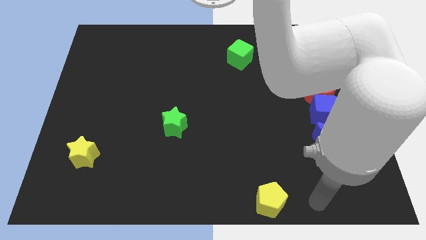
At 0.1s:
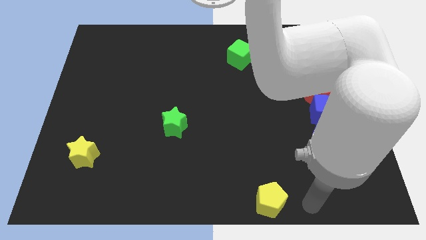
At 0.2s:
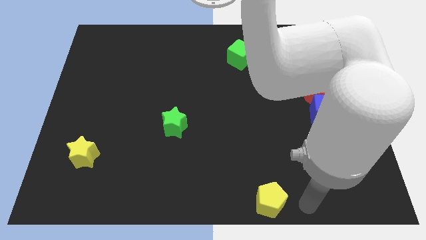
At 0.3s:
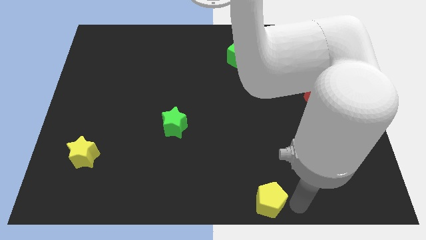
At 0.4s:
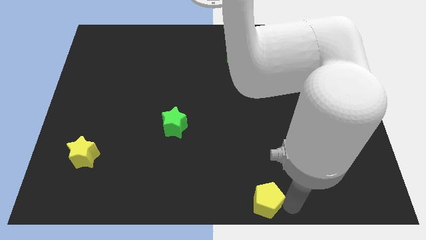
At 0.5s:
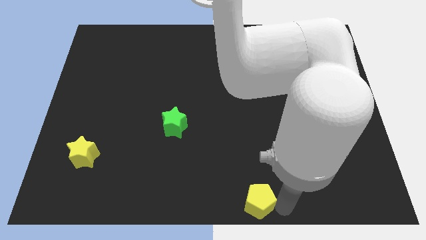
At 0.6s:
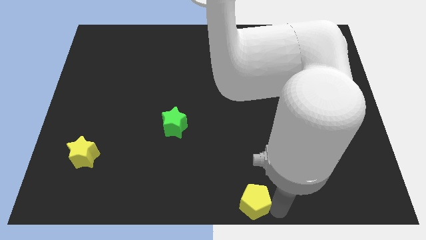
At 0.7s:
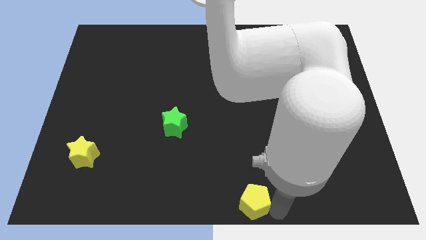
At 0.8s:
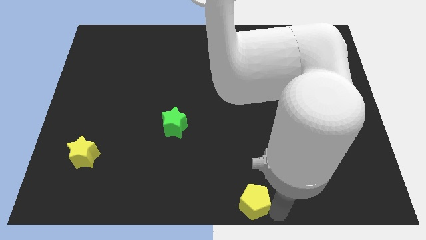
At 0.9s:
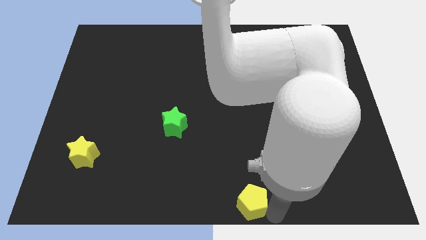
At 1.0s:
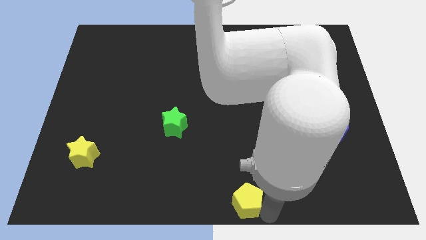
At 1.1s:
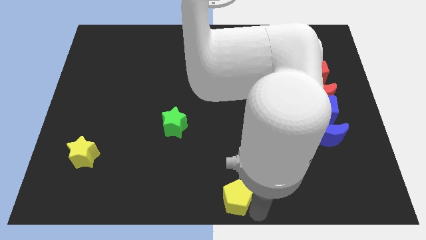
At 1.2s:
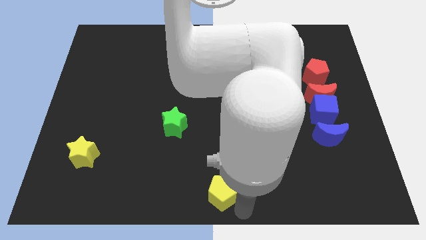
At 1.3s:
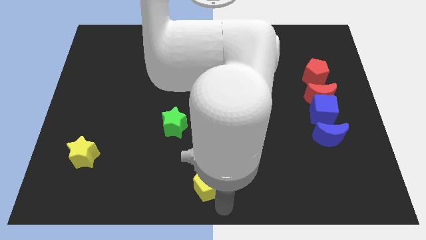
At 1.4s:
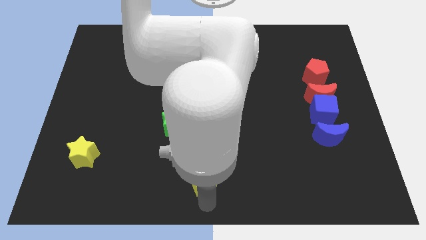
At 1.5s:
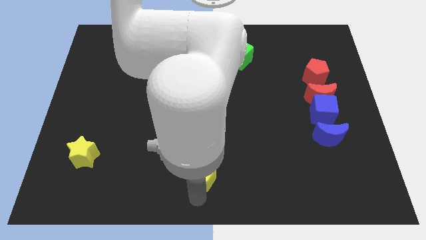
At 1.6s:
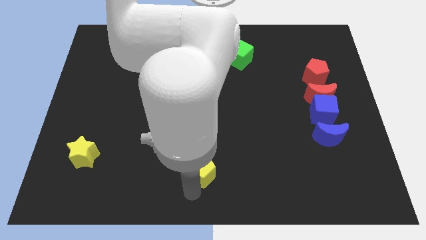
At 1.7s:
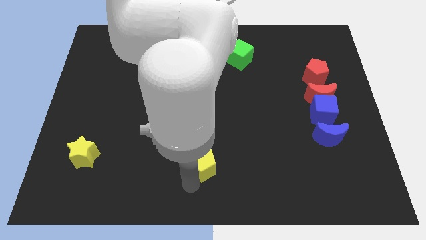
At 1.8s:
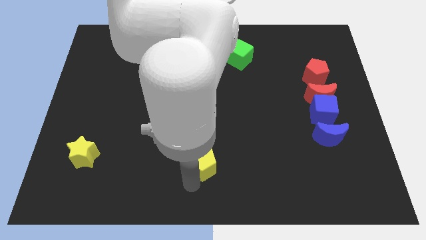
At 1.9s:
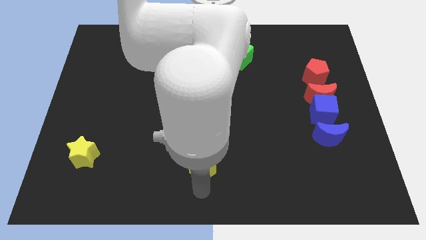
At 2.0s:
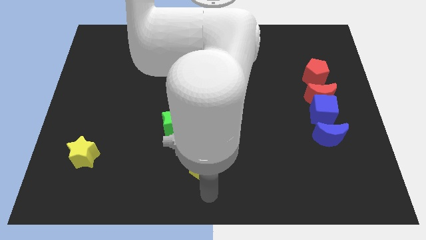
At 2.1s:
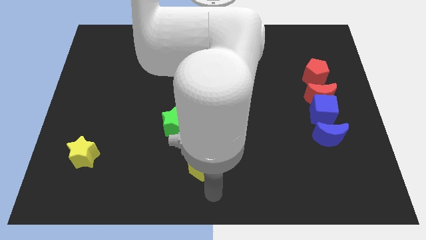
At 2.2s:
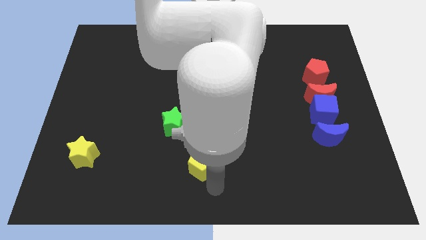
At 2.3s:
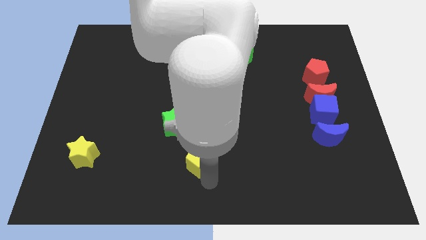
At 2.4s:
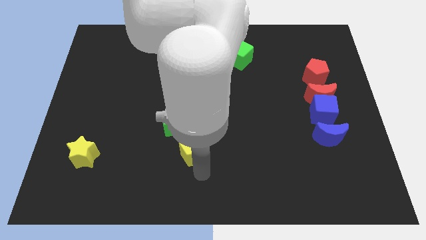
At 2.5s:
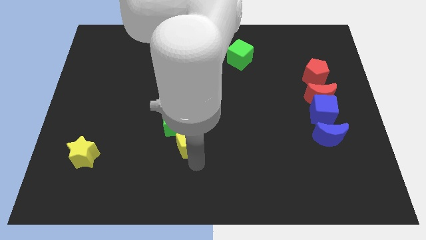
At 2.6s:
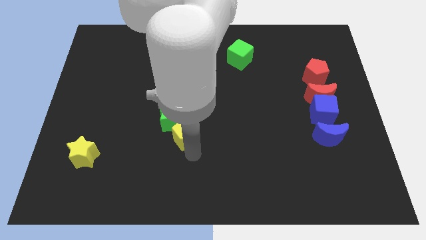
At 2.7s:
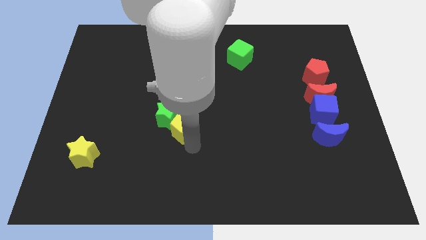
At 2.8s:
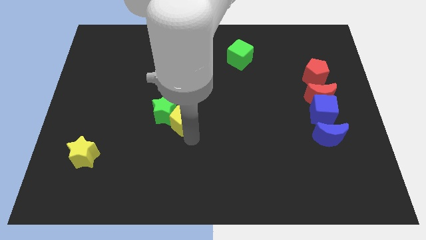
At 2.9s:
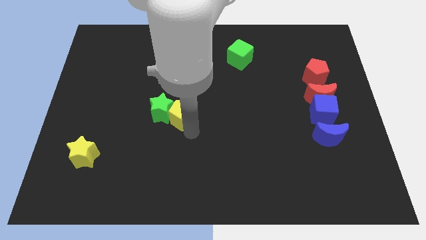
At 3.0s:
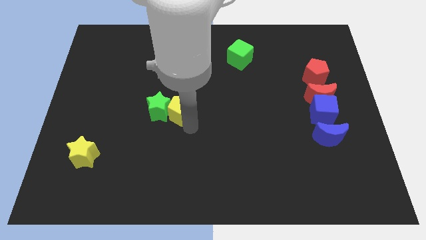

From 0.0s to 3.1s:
put the yellow pentagon on the right side of the green star

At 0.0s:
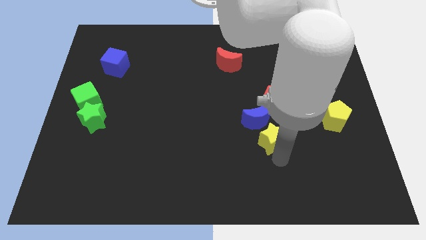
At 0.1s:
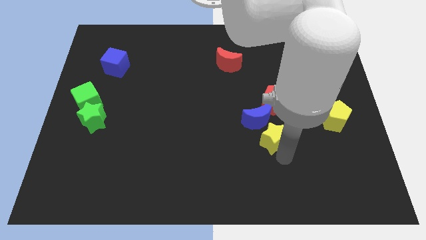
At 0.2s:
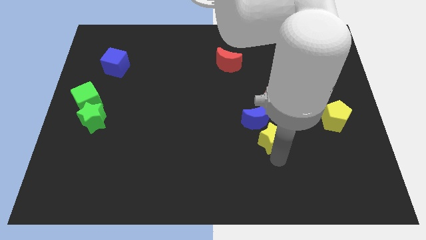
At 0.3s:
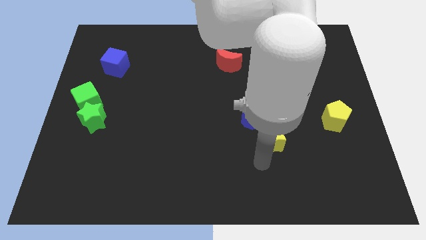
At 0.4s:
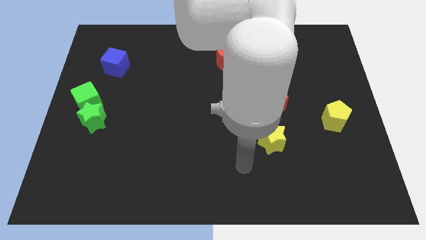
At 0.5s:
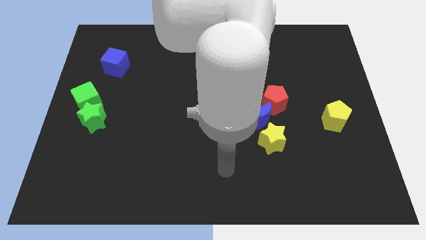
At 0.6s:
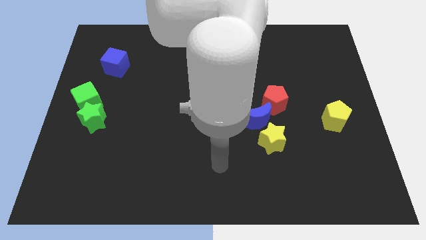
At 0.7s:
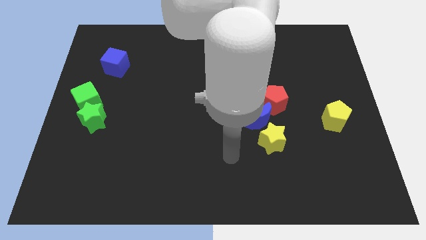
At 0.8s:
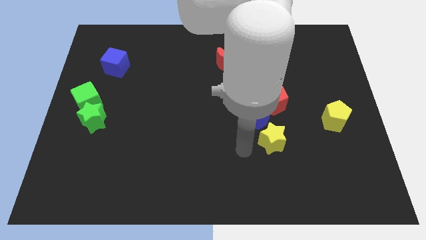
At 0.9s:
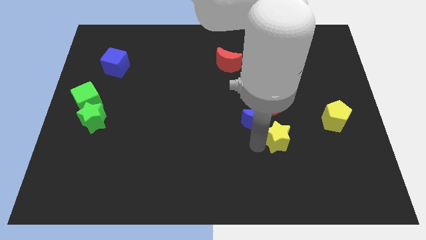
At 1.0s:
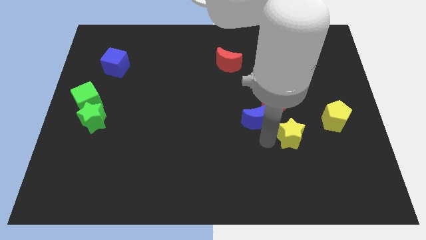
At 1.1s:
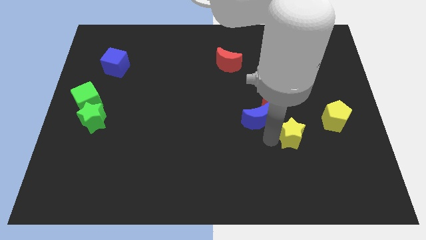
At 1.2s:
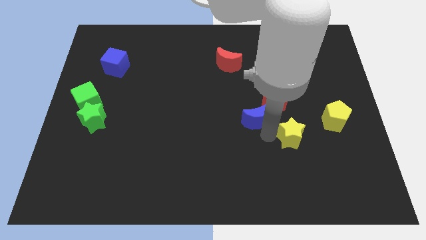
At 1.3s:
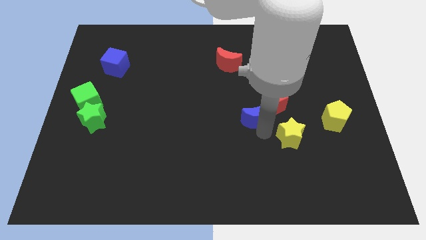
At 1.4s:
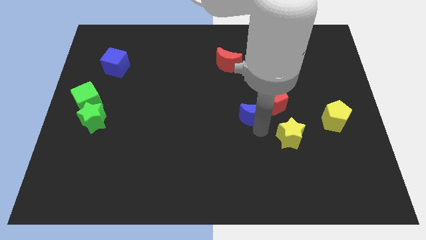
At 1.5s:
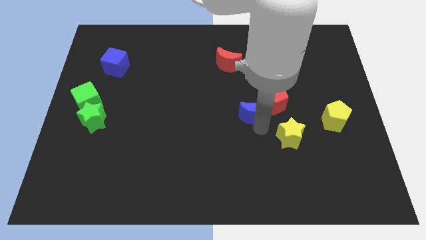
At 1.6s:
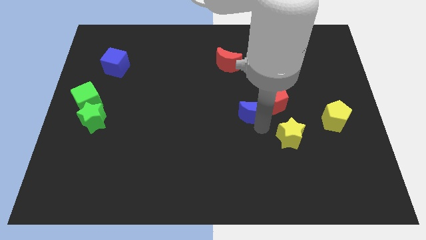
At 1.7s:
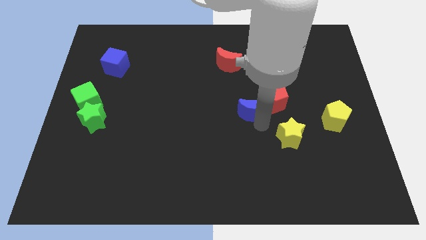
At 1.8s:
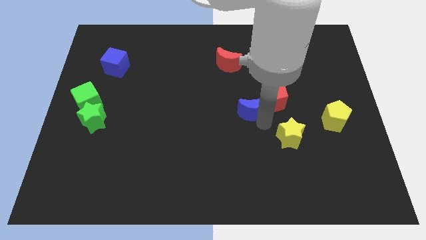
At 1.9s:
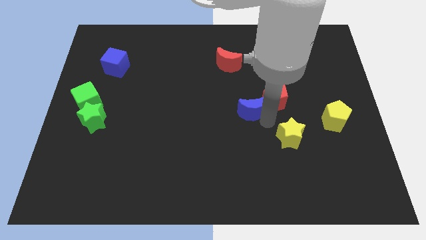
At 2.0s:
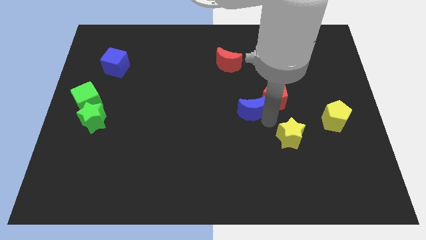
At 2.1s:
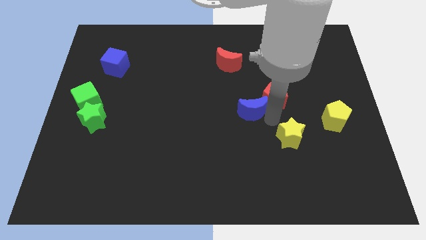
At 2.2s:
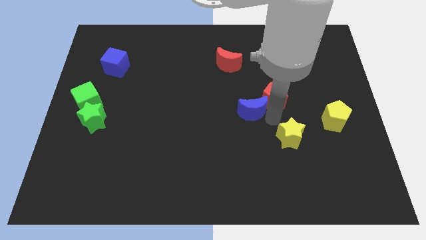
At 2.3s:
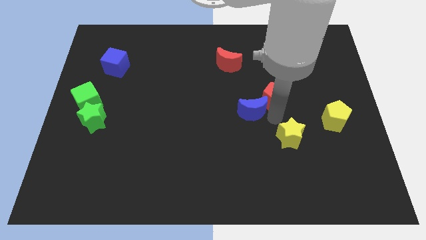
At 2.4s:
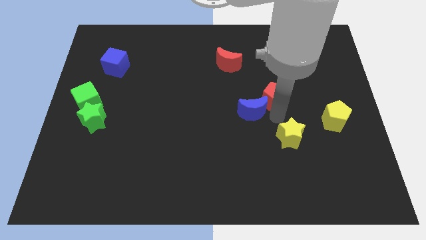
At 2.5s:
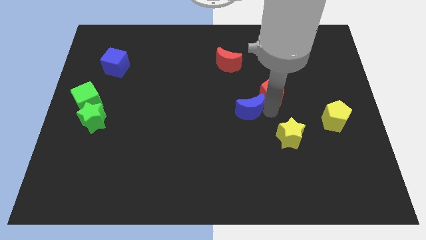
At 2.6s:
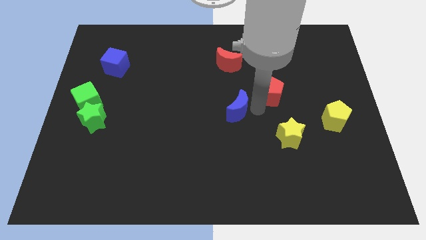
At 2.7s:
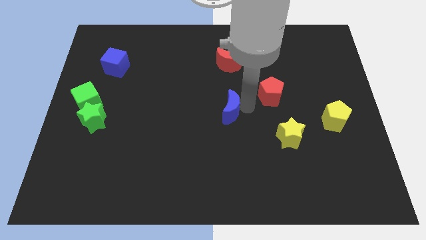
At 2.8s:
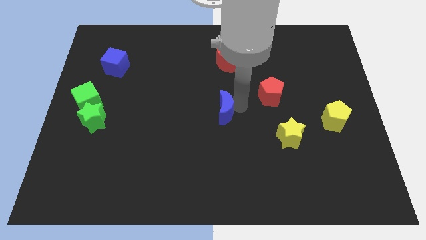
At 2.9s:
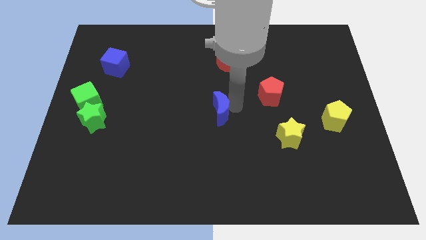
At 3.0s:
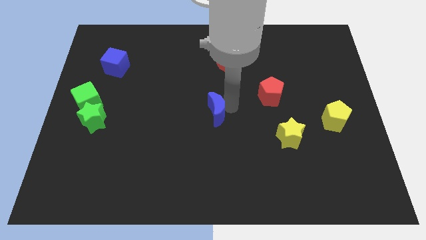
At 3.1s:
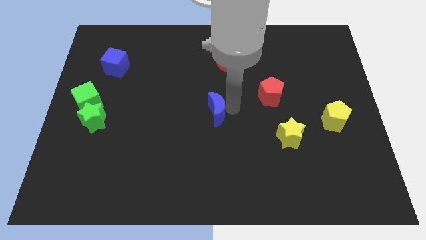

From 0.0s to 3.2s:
separate the yellow star blue crescent and the red pentagon

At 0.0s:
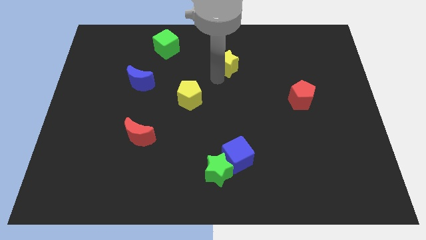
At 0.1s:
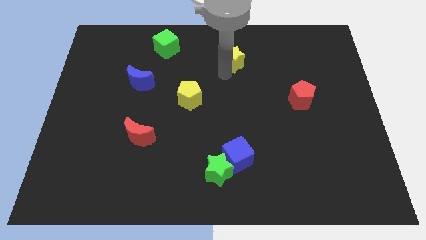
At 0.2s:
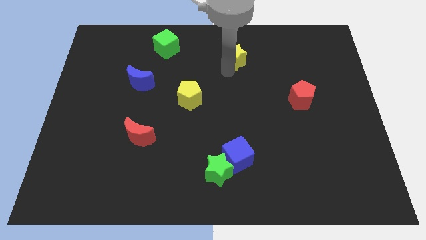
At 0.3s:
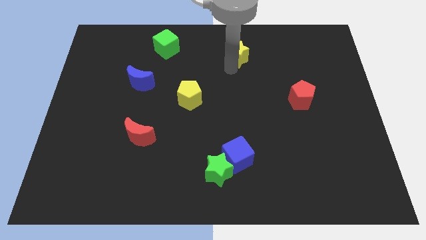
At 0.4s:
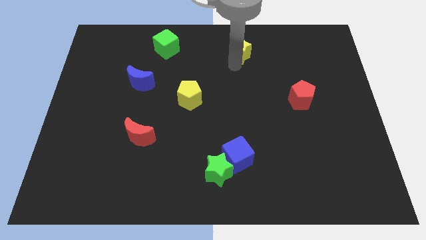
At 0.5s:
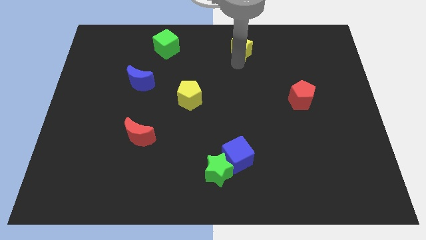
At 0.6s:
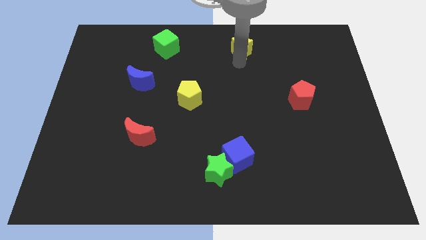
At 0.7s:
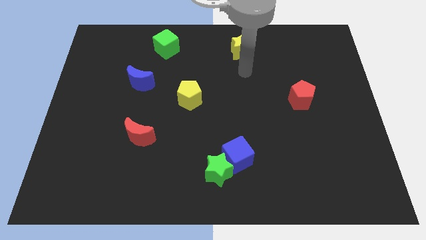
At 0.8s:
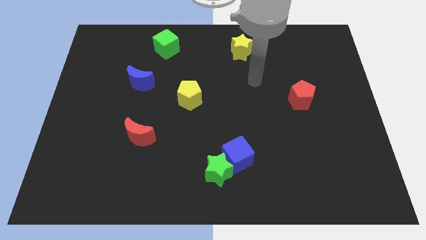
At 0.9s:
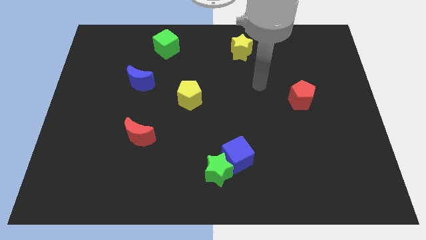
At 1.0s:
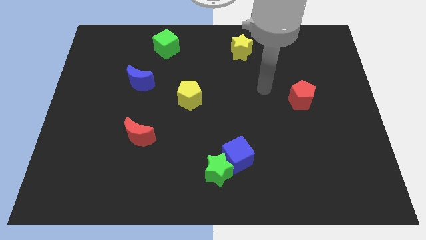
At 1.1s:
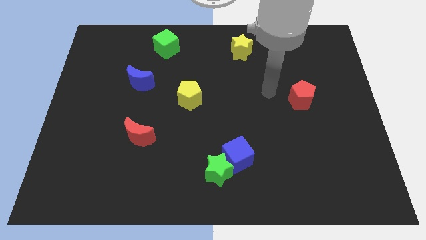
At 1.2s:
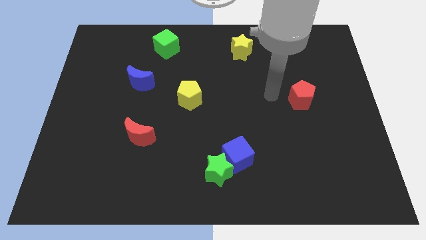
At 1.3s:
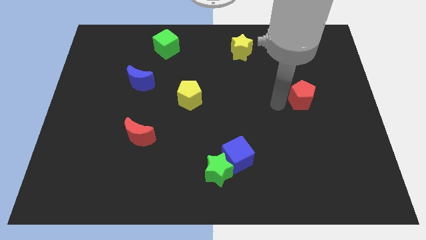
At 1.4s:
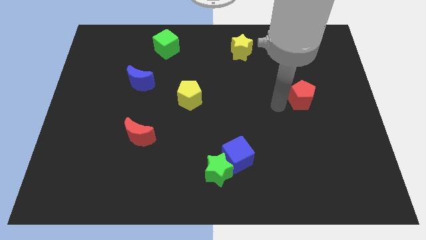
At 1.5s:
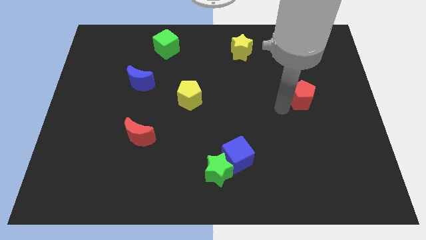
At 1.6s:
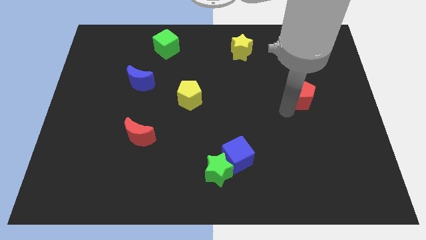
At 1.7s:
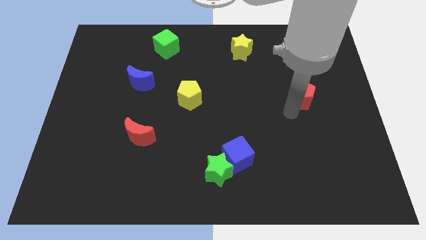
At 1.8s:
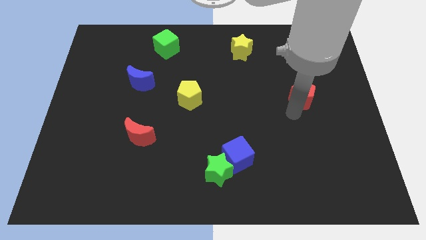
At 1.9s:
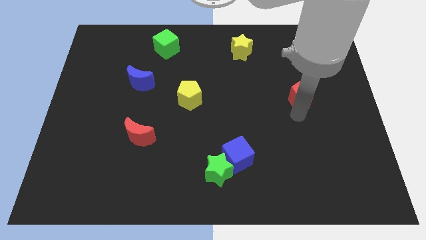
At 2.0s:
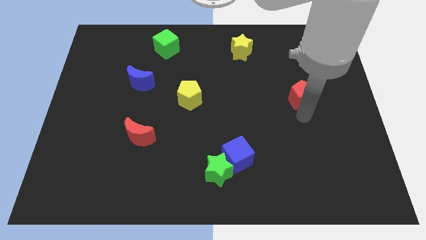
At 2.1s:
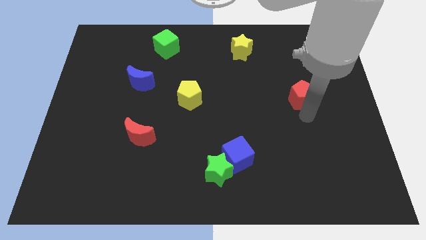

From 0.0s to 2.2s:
place the arm down to the red pentagon

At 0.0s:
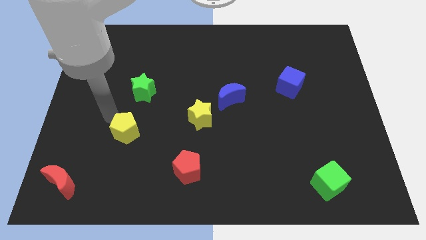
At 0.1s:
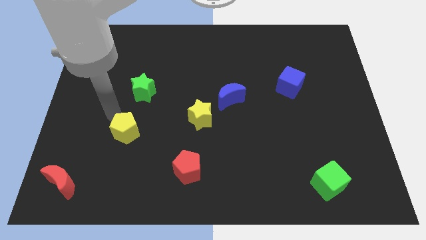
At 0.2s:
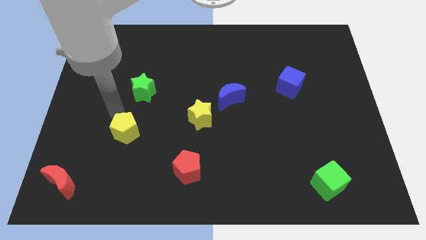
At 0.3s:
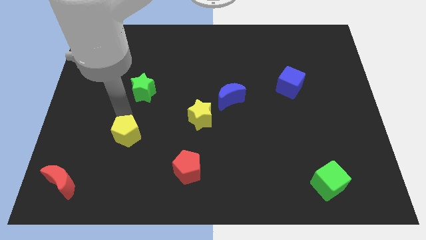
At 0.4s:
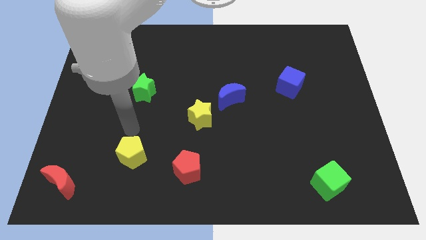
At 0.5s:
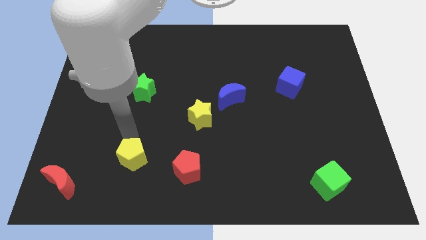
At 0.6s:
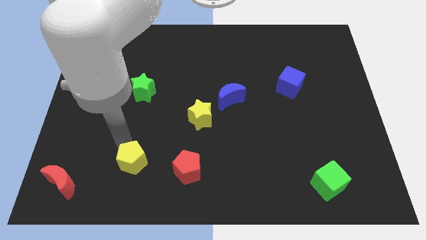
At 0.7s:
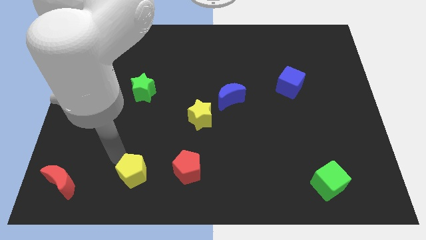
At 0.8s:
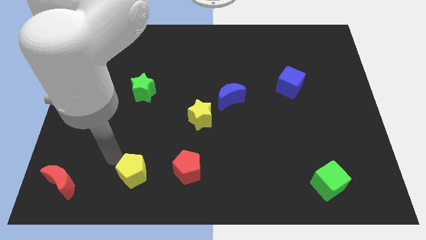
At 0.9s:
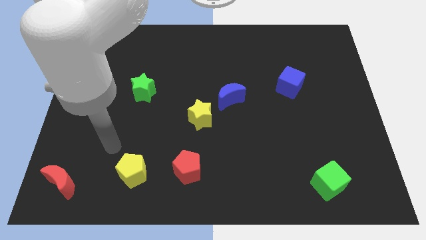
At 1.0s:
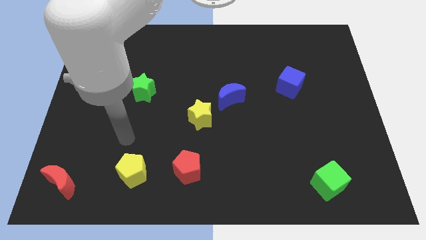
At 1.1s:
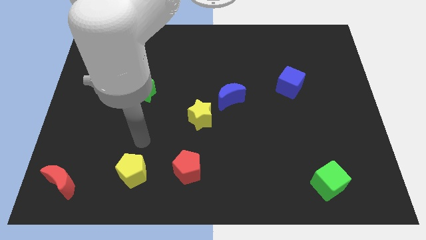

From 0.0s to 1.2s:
move the yellow pentagon to the left of the red pentagon
